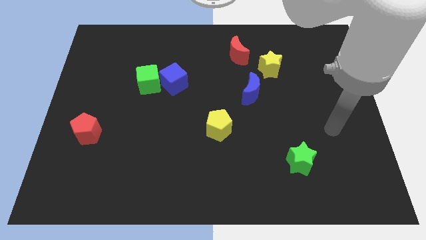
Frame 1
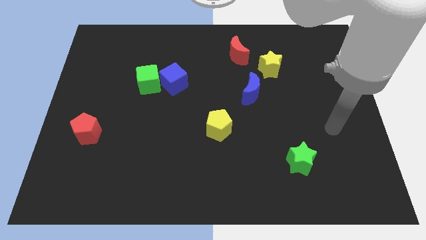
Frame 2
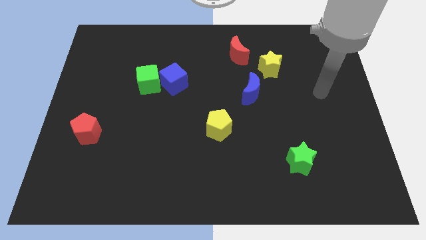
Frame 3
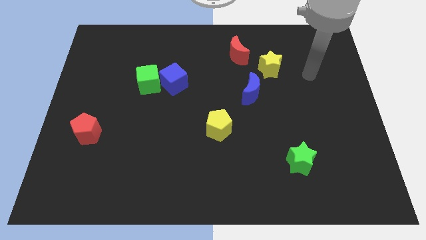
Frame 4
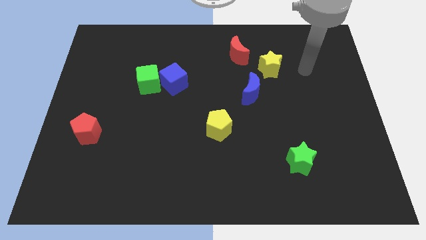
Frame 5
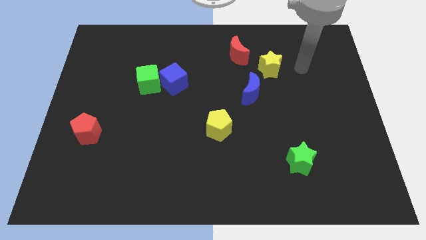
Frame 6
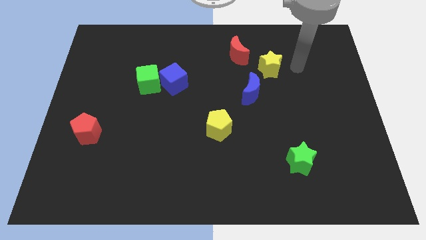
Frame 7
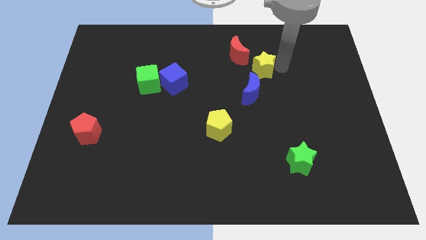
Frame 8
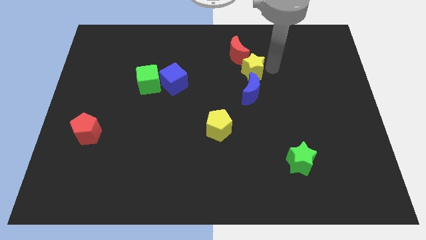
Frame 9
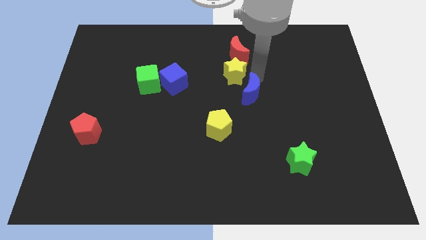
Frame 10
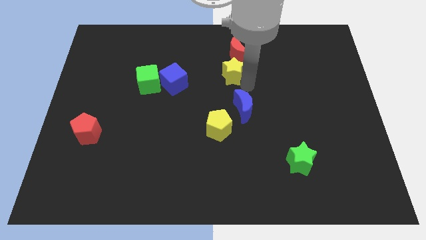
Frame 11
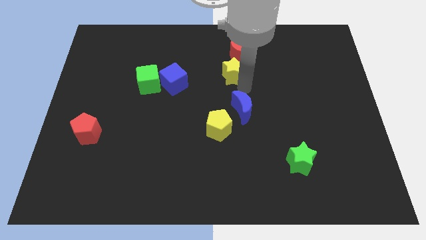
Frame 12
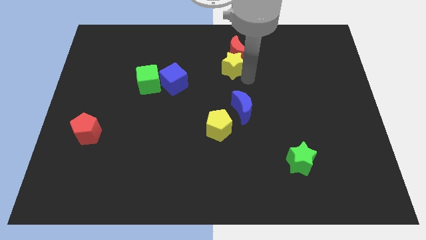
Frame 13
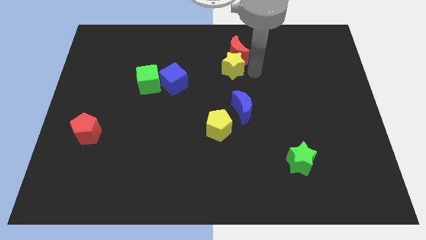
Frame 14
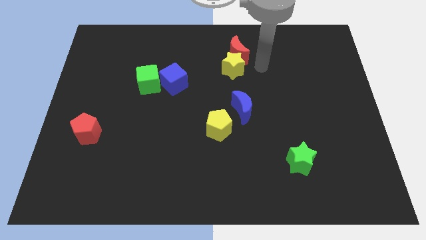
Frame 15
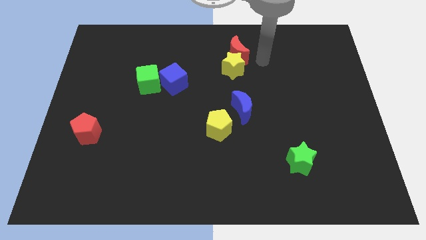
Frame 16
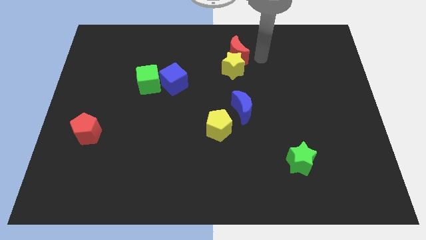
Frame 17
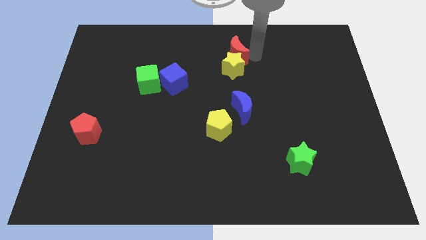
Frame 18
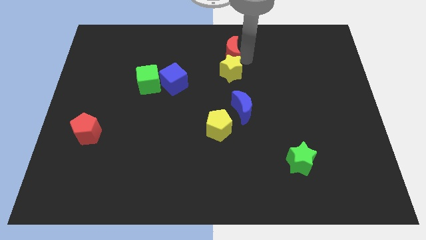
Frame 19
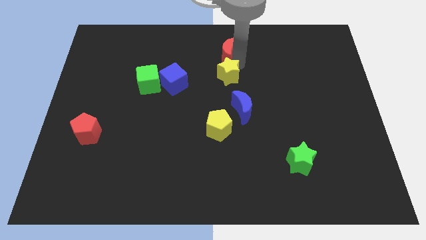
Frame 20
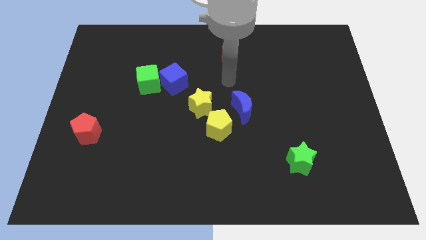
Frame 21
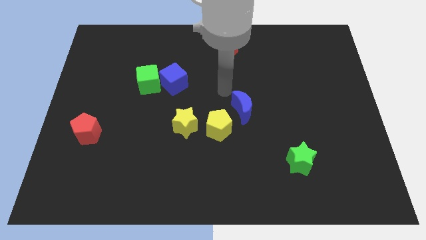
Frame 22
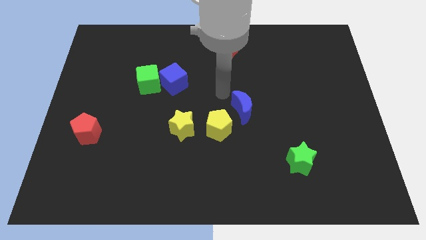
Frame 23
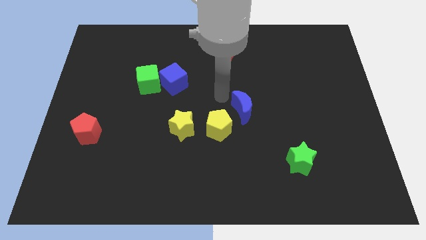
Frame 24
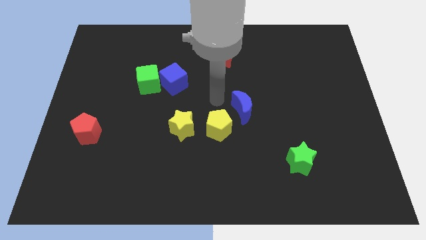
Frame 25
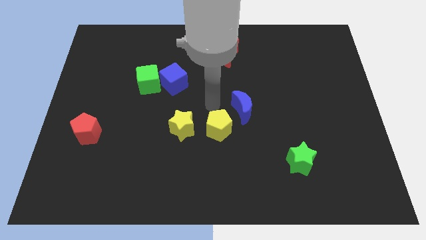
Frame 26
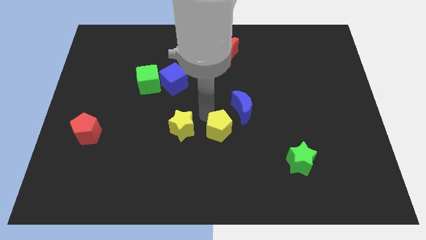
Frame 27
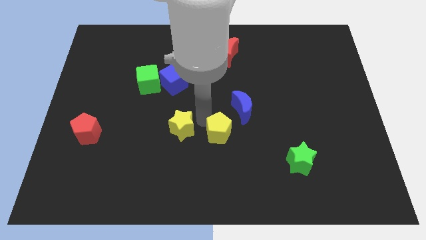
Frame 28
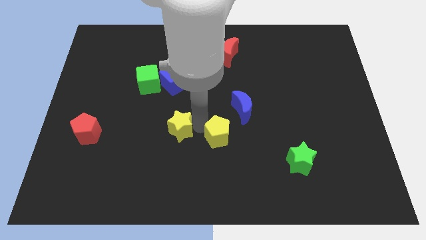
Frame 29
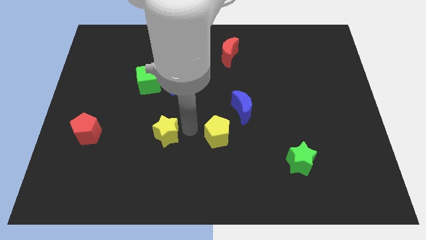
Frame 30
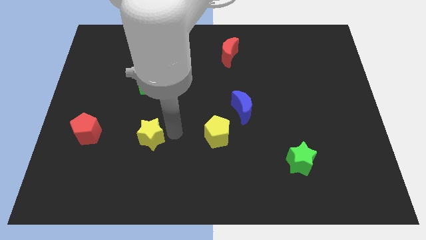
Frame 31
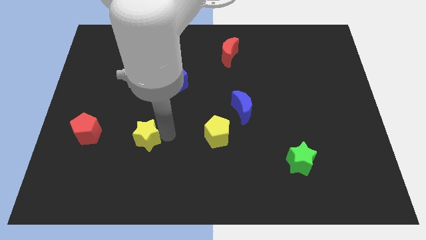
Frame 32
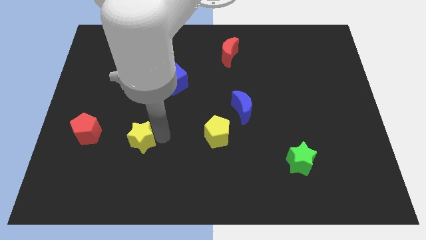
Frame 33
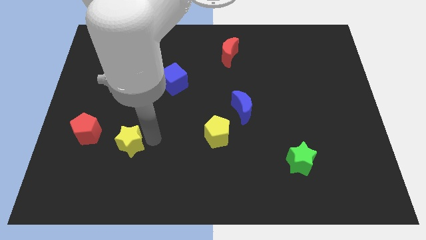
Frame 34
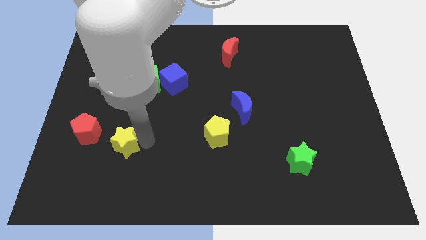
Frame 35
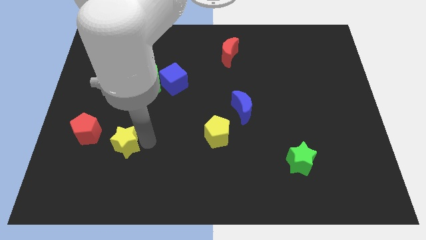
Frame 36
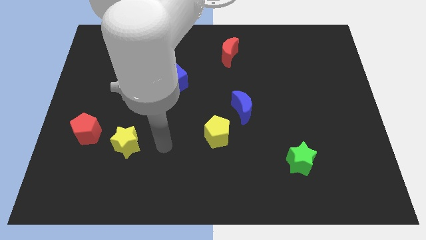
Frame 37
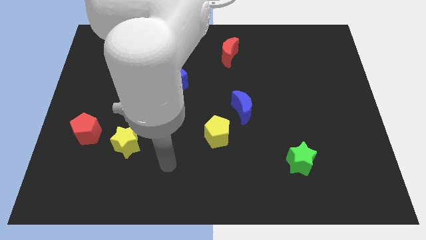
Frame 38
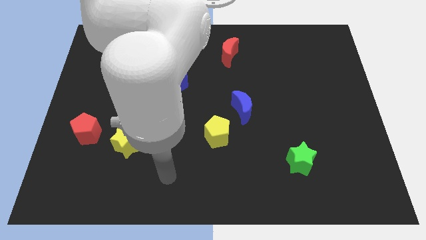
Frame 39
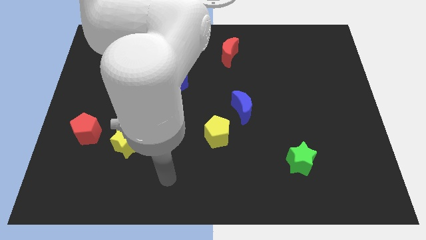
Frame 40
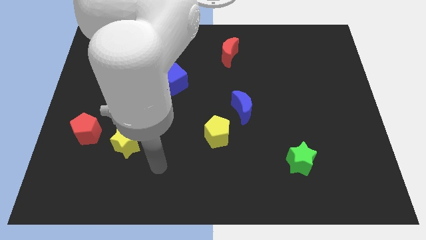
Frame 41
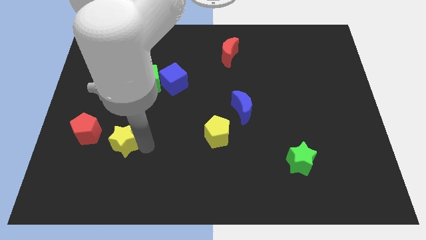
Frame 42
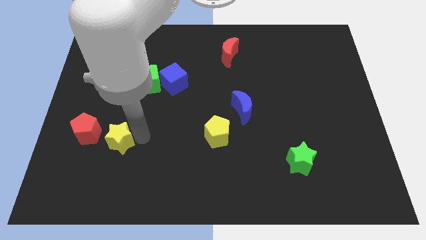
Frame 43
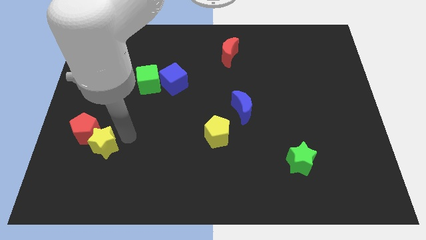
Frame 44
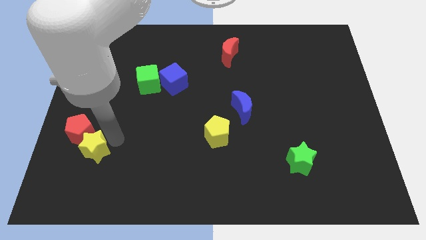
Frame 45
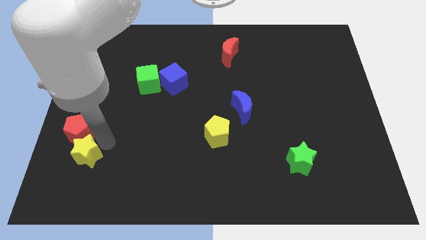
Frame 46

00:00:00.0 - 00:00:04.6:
push the yellow star towards the red pentagon

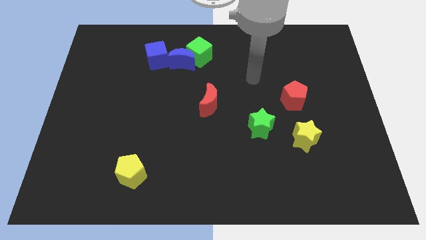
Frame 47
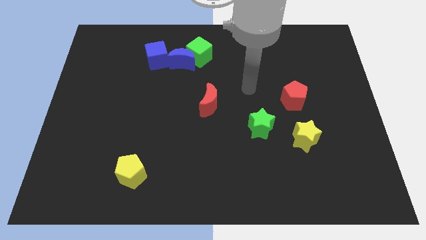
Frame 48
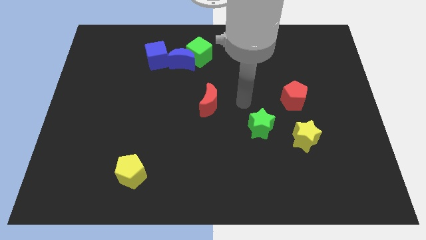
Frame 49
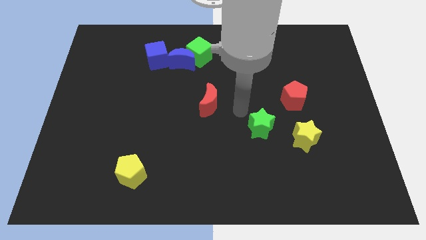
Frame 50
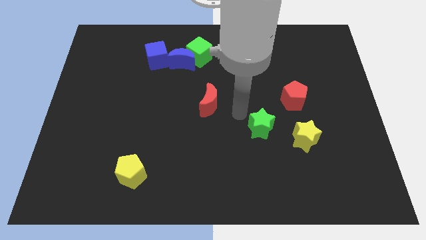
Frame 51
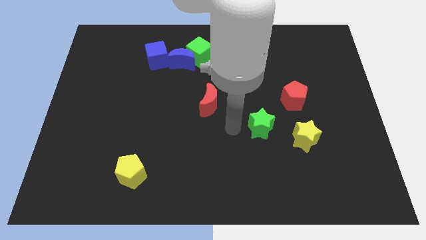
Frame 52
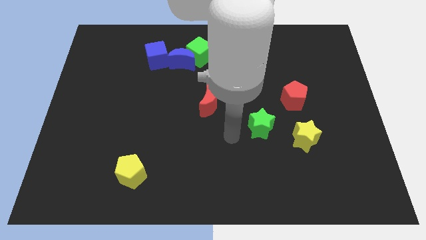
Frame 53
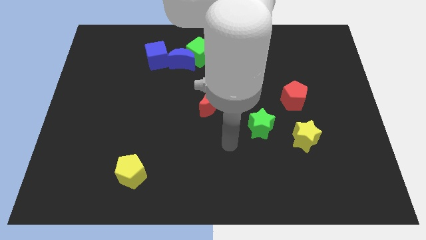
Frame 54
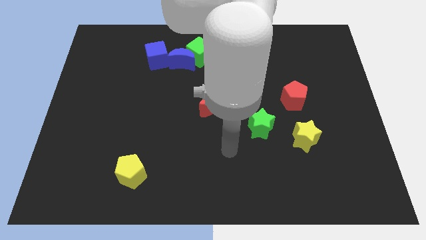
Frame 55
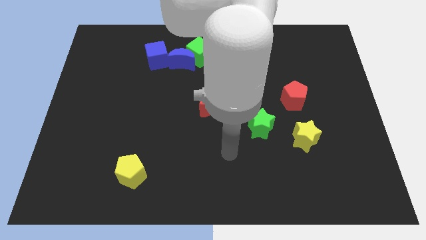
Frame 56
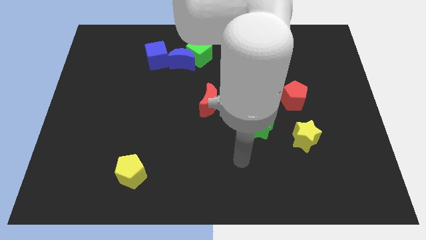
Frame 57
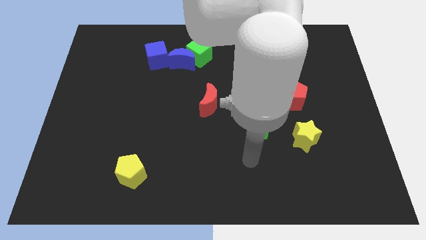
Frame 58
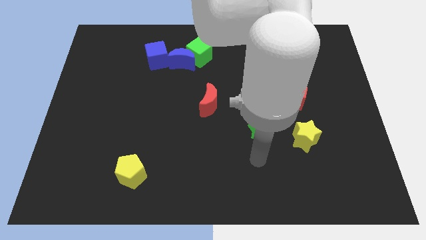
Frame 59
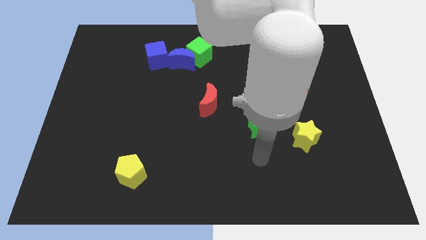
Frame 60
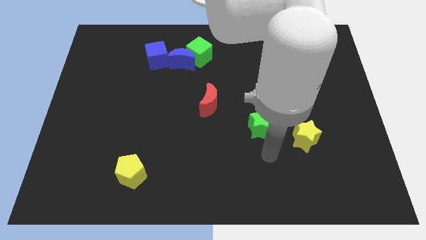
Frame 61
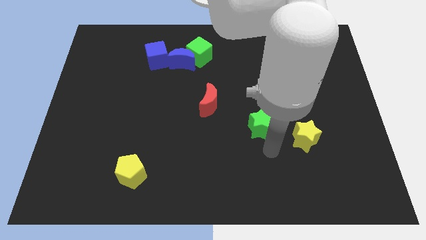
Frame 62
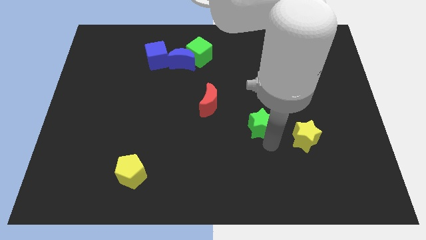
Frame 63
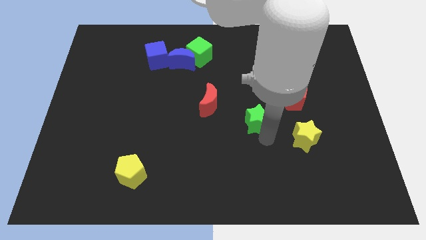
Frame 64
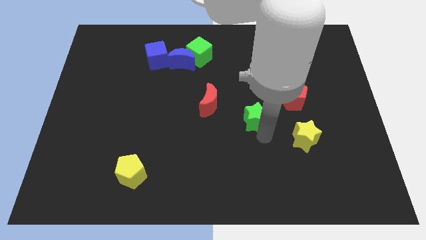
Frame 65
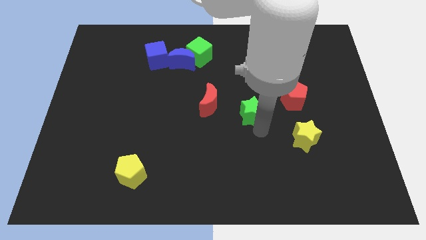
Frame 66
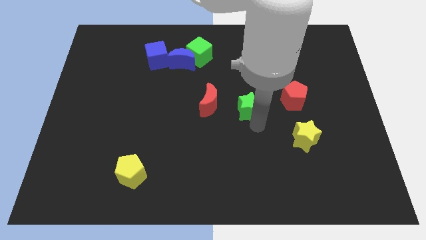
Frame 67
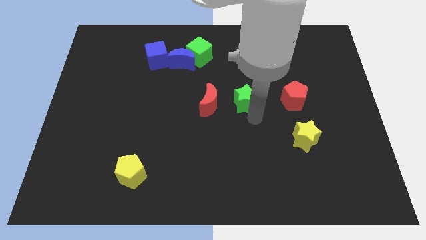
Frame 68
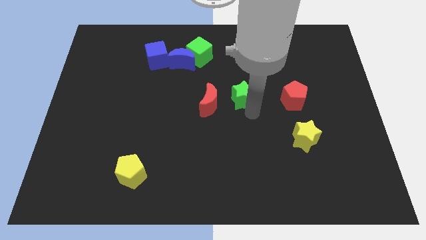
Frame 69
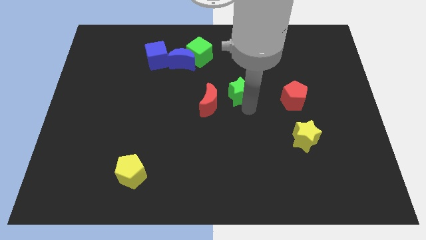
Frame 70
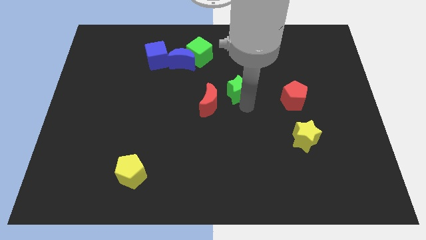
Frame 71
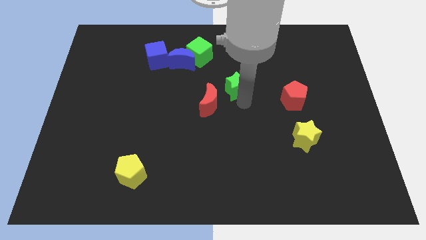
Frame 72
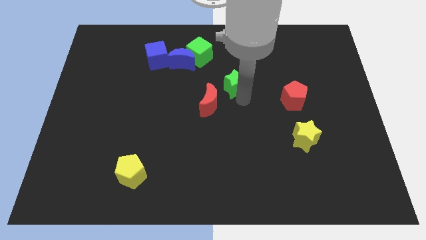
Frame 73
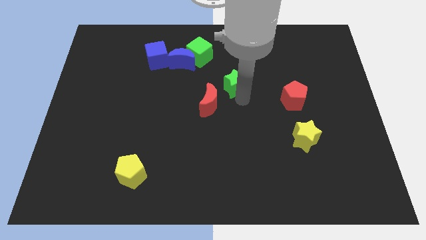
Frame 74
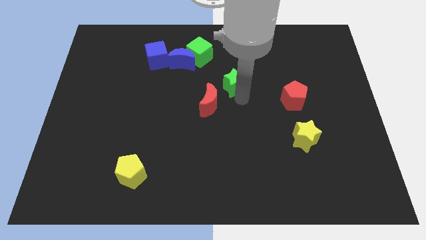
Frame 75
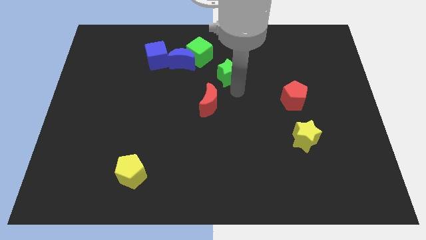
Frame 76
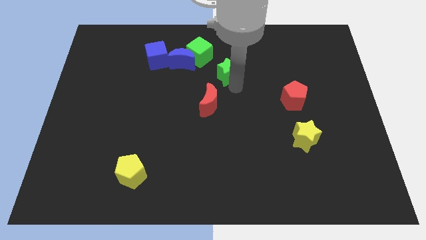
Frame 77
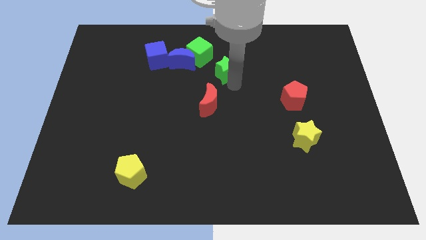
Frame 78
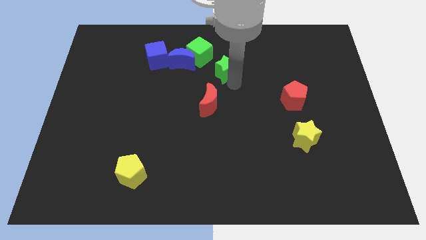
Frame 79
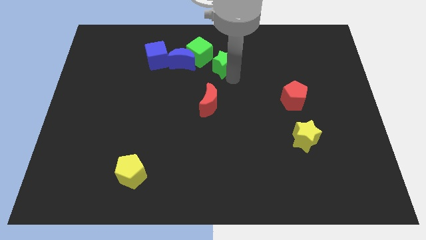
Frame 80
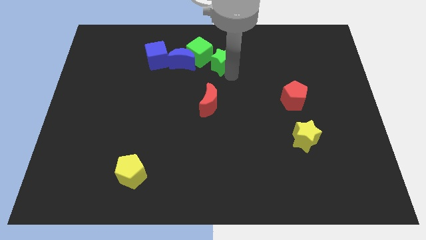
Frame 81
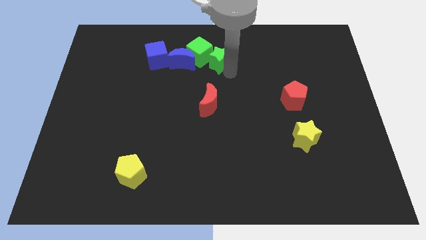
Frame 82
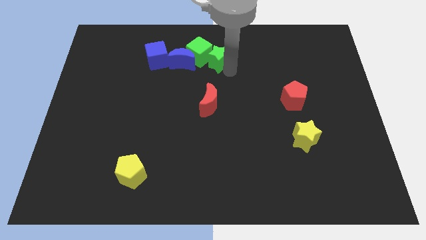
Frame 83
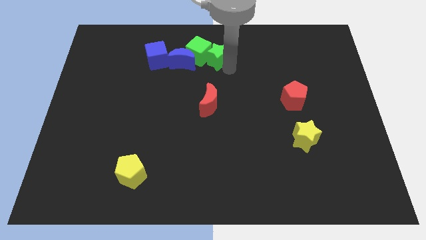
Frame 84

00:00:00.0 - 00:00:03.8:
push the green star to the green cube
